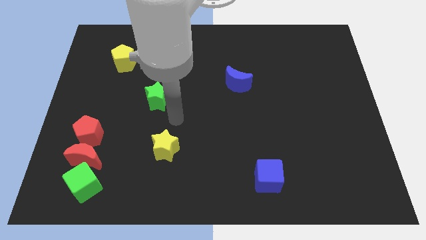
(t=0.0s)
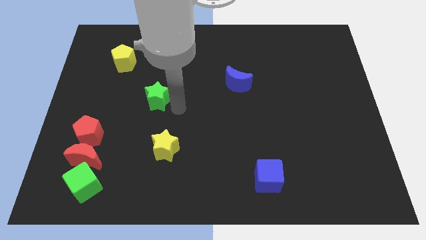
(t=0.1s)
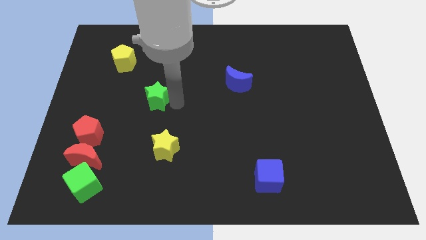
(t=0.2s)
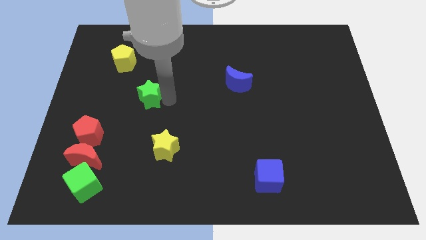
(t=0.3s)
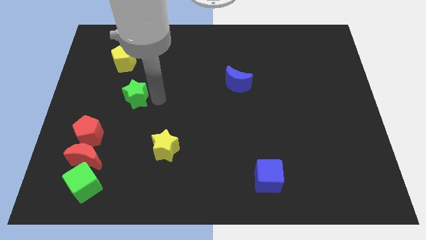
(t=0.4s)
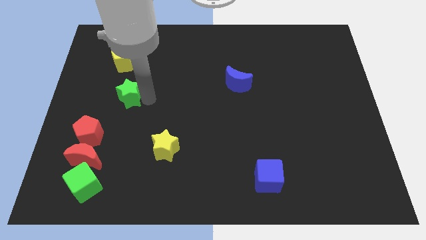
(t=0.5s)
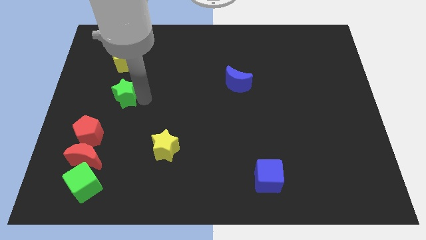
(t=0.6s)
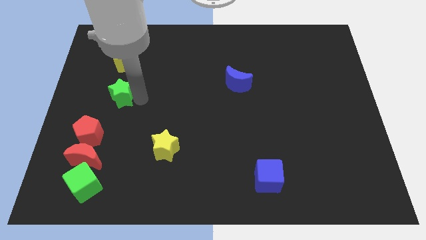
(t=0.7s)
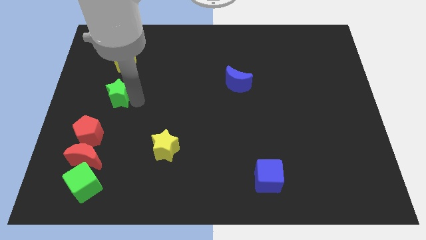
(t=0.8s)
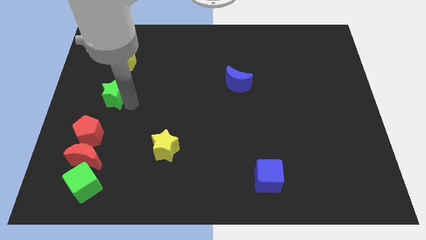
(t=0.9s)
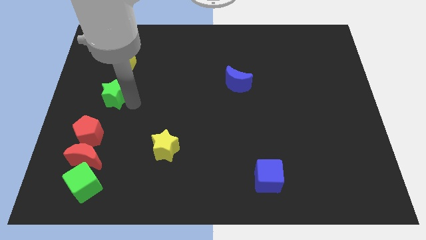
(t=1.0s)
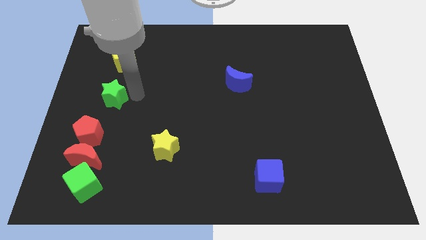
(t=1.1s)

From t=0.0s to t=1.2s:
slide the green star slightly to the left

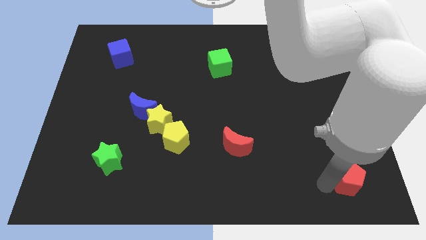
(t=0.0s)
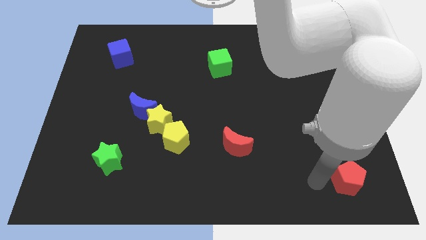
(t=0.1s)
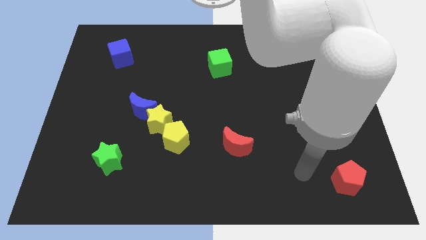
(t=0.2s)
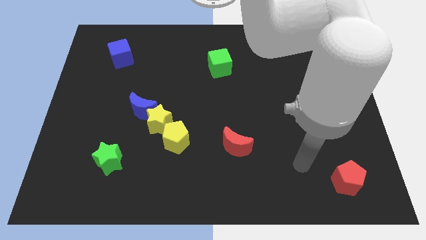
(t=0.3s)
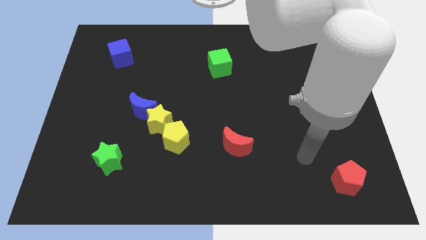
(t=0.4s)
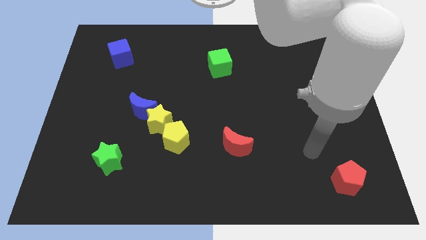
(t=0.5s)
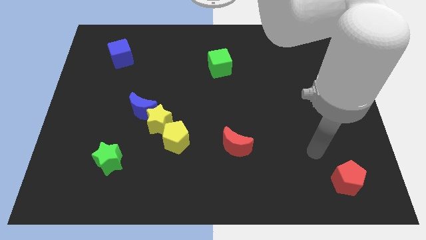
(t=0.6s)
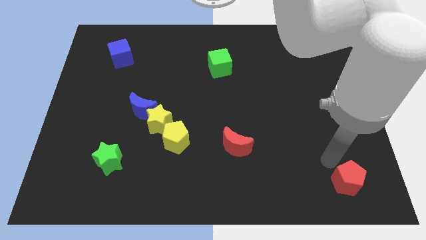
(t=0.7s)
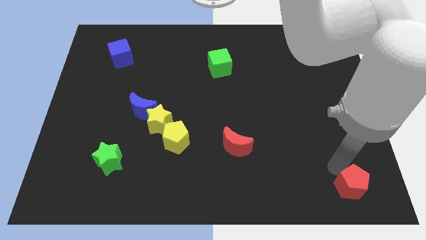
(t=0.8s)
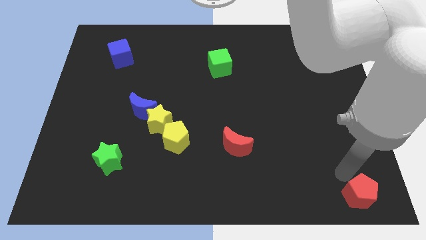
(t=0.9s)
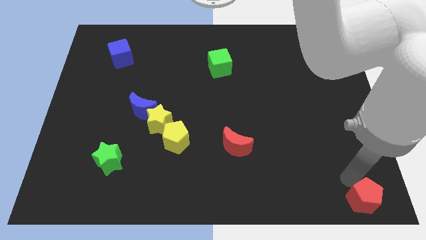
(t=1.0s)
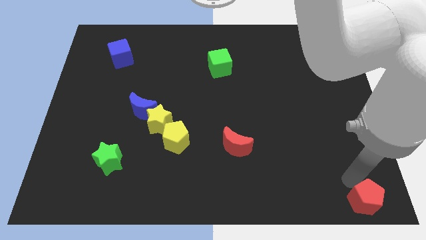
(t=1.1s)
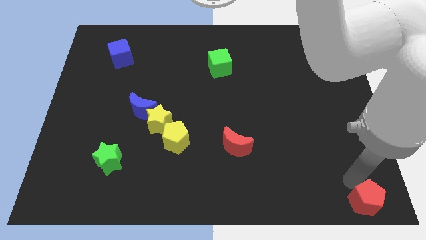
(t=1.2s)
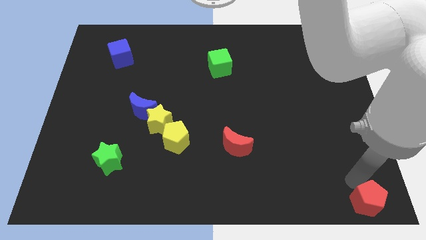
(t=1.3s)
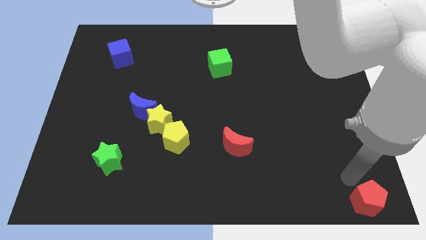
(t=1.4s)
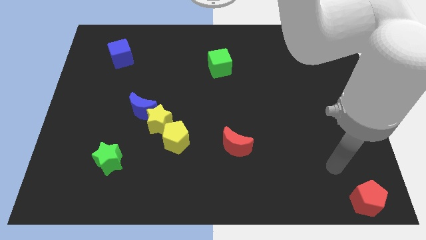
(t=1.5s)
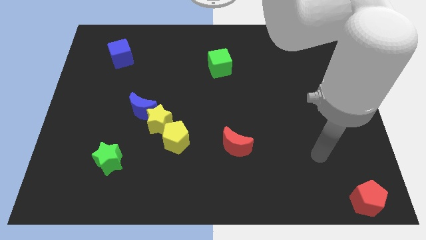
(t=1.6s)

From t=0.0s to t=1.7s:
push the red pentagon towards the bottom right corner of the board

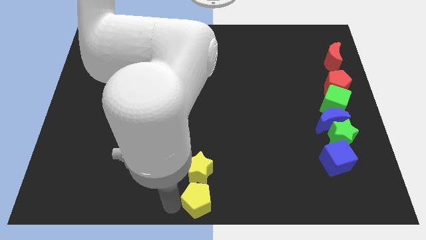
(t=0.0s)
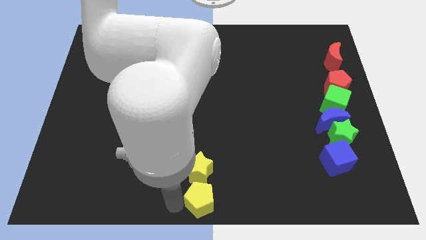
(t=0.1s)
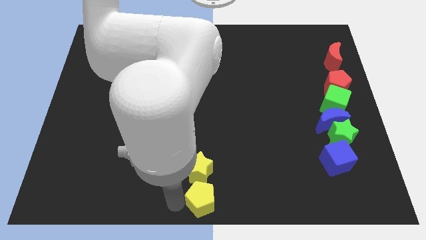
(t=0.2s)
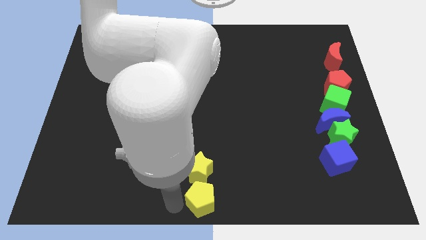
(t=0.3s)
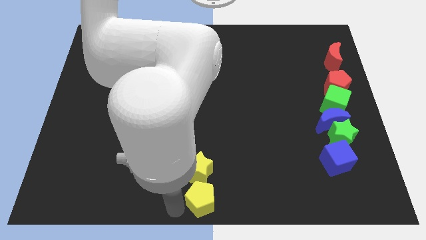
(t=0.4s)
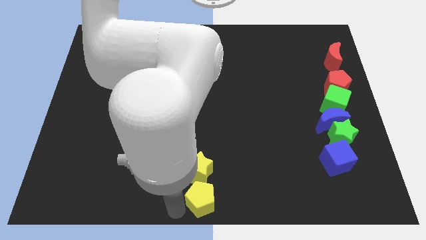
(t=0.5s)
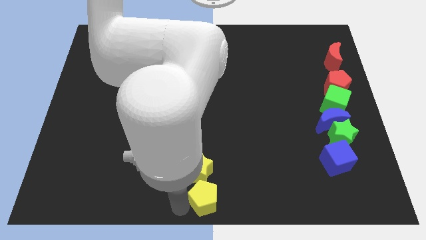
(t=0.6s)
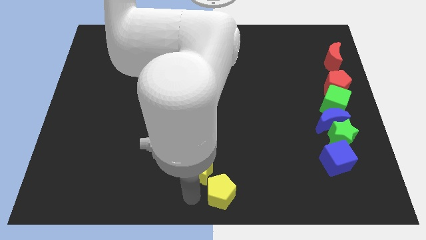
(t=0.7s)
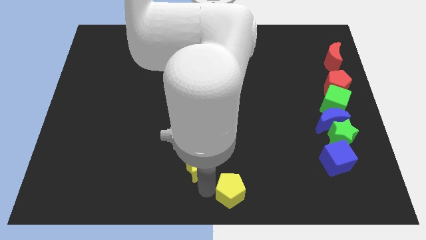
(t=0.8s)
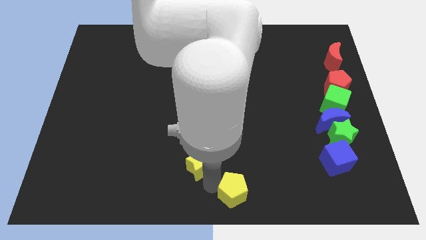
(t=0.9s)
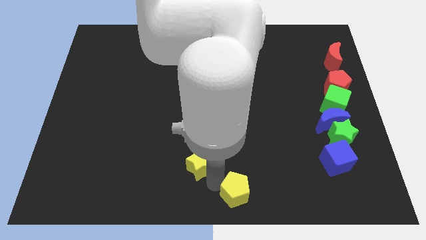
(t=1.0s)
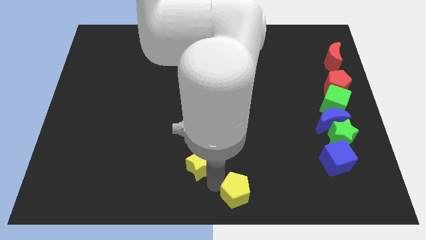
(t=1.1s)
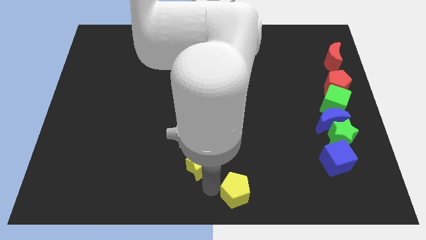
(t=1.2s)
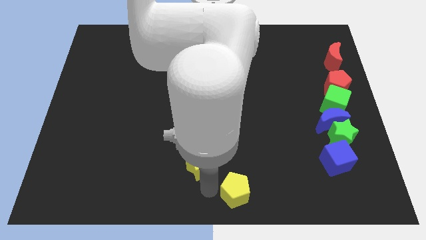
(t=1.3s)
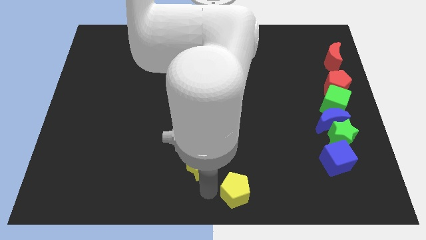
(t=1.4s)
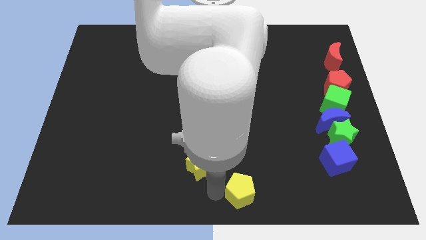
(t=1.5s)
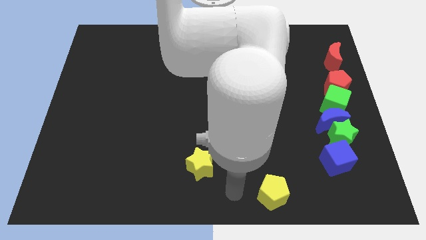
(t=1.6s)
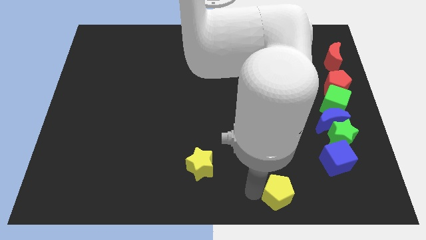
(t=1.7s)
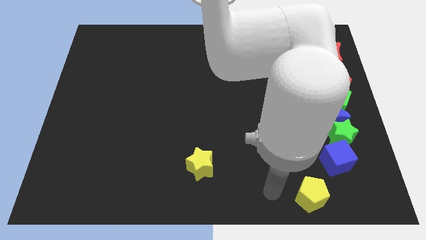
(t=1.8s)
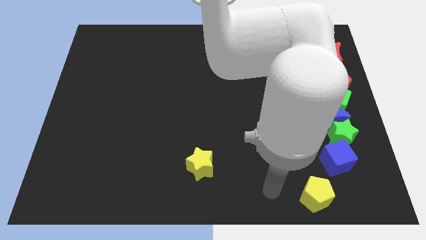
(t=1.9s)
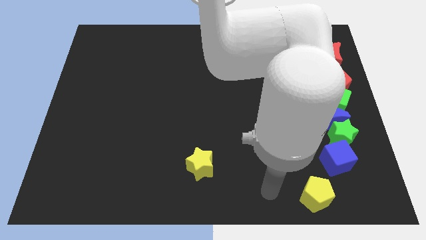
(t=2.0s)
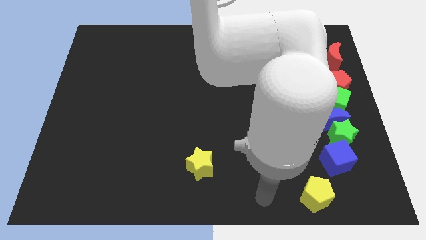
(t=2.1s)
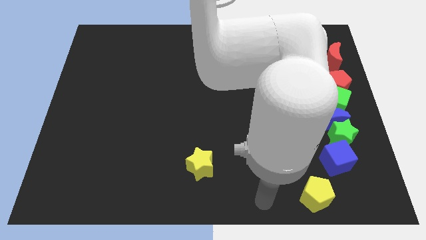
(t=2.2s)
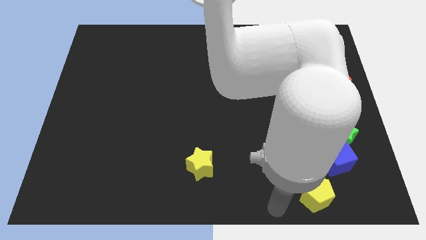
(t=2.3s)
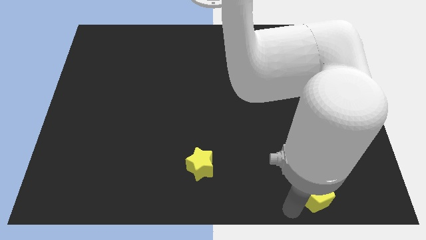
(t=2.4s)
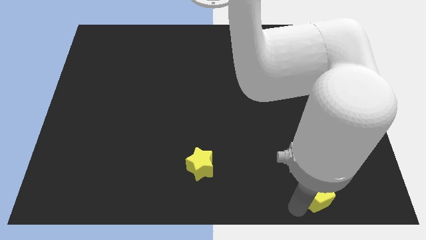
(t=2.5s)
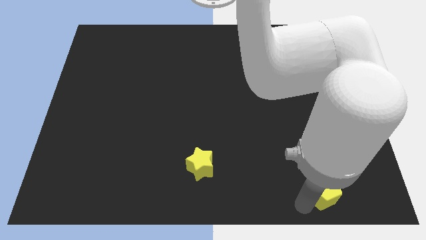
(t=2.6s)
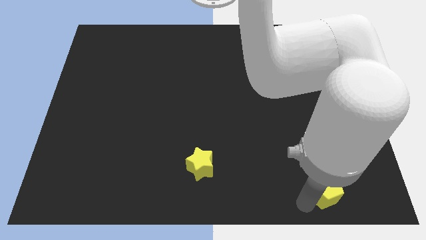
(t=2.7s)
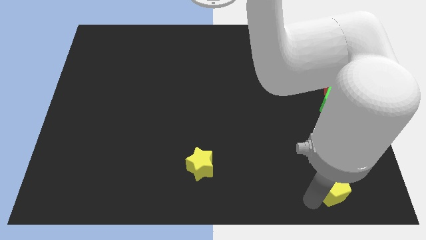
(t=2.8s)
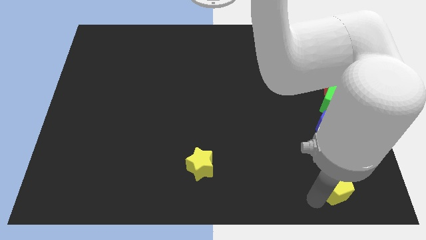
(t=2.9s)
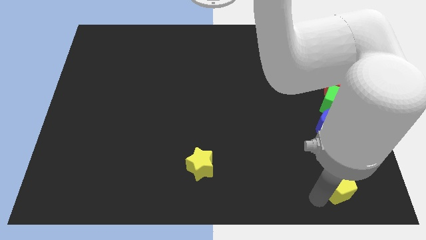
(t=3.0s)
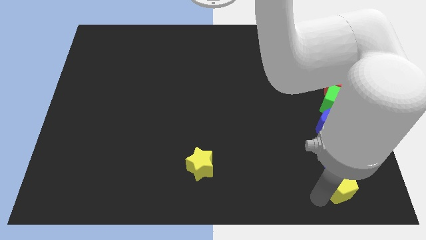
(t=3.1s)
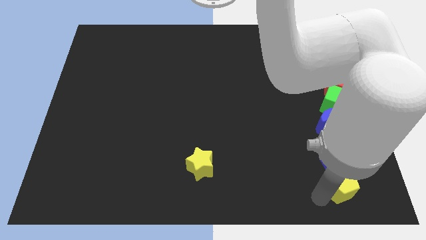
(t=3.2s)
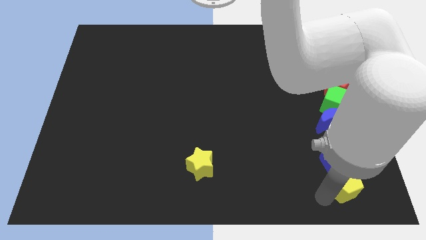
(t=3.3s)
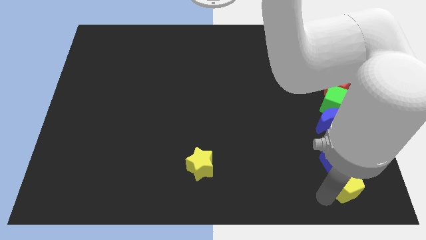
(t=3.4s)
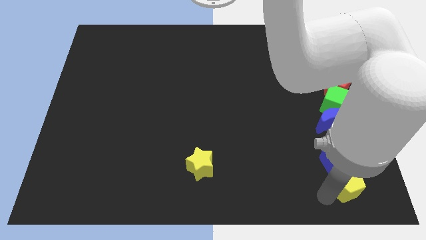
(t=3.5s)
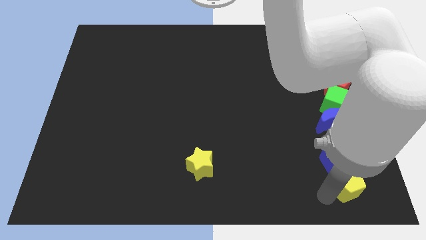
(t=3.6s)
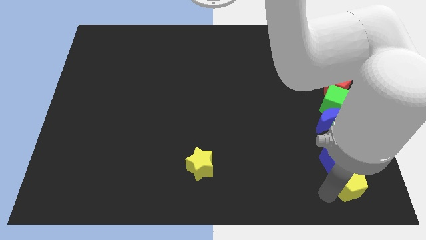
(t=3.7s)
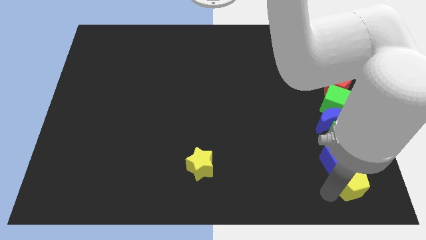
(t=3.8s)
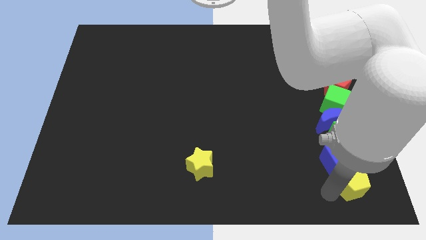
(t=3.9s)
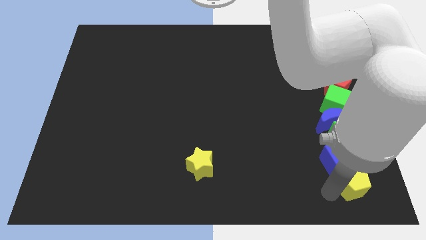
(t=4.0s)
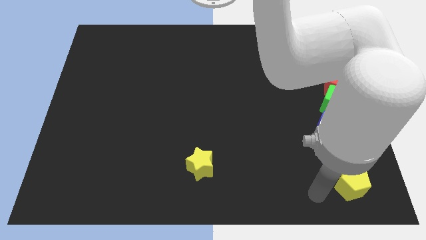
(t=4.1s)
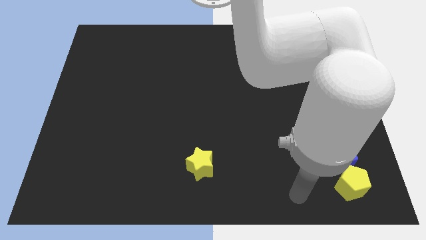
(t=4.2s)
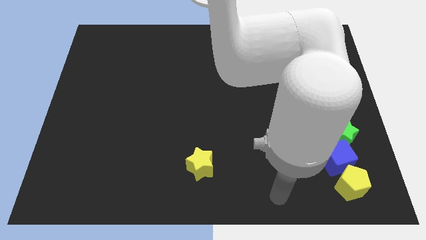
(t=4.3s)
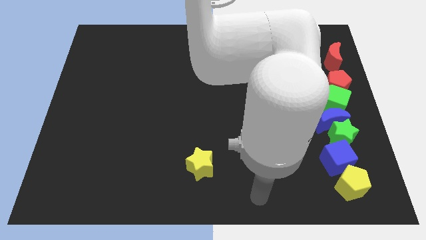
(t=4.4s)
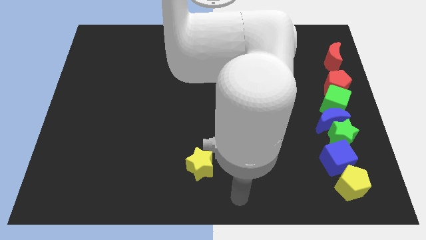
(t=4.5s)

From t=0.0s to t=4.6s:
put the yellow pentagon to the bottom right side of the blue cube

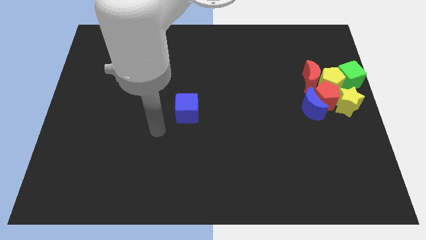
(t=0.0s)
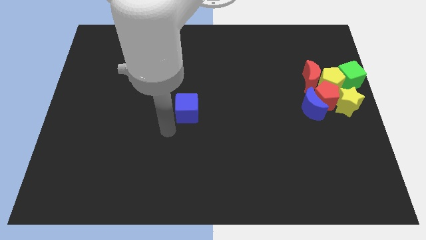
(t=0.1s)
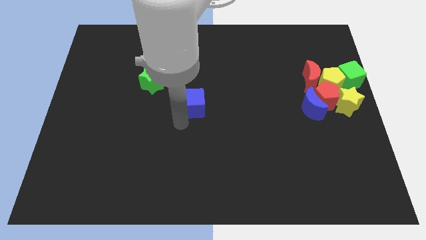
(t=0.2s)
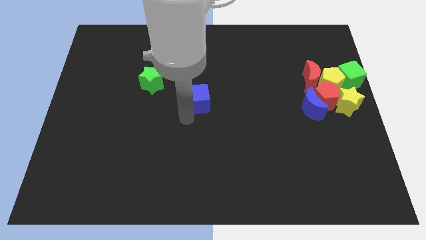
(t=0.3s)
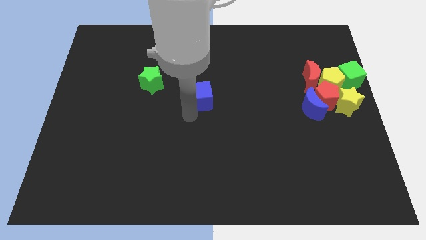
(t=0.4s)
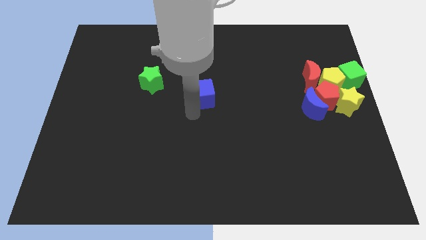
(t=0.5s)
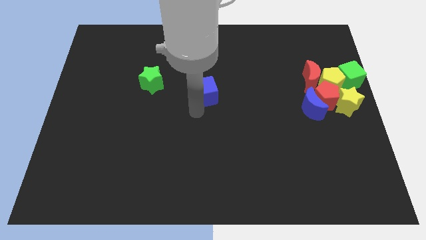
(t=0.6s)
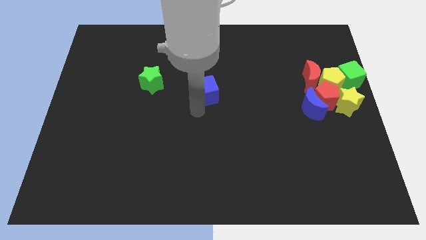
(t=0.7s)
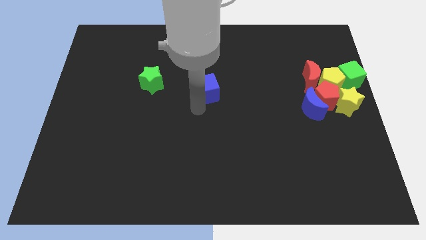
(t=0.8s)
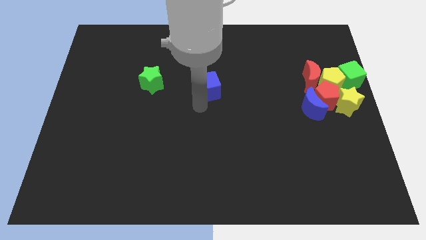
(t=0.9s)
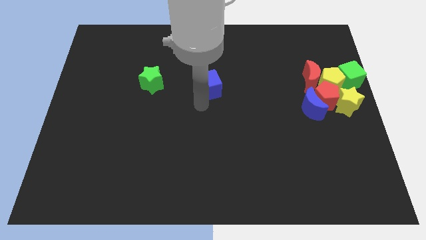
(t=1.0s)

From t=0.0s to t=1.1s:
move blue cube slightly upwards

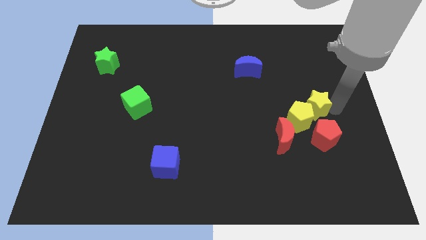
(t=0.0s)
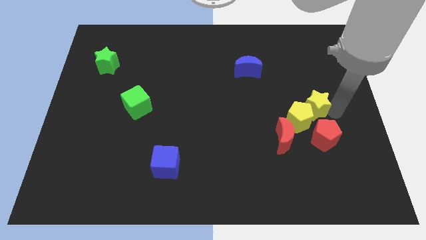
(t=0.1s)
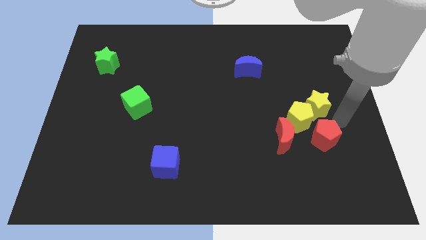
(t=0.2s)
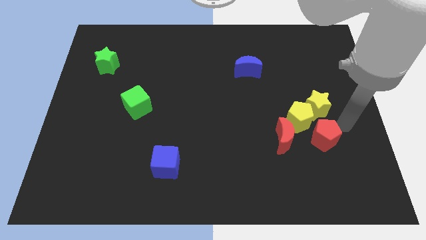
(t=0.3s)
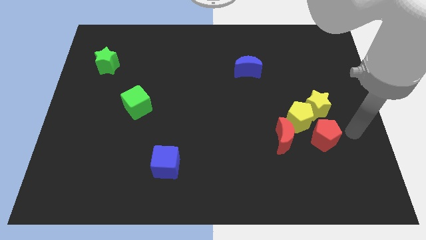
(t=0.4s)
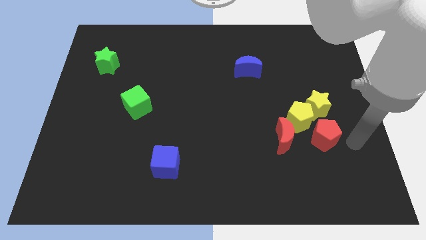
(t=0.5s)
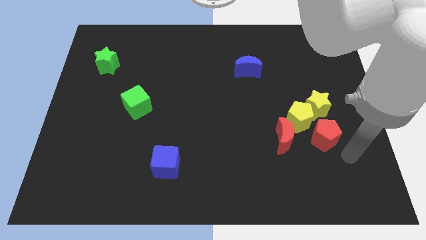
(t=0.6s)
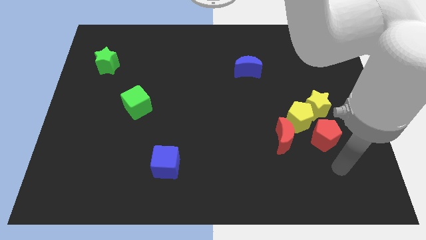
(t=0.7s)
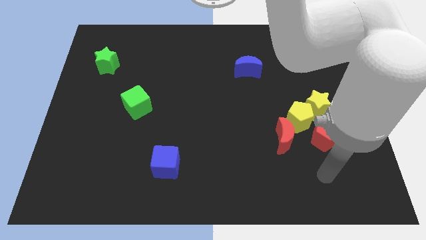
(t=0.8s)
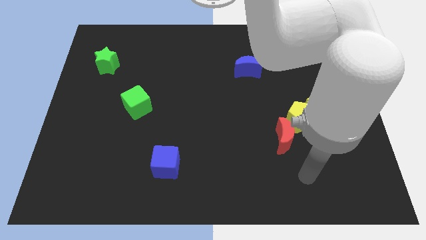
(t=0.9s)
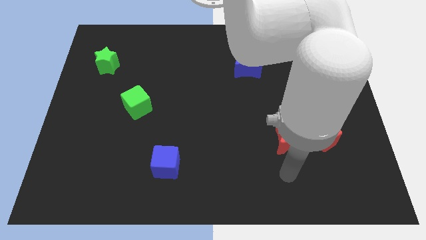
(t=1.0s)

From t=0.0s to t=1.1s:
move the pointer to the bottom of the red moon
